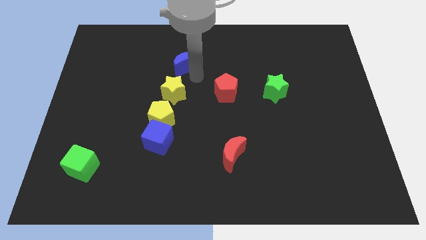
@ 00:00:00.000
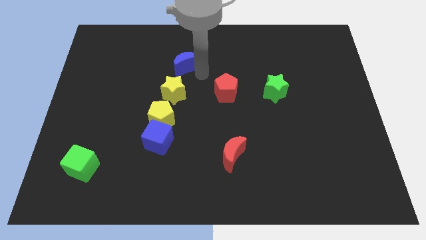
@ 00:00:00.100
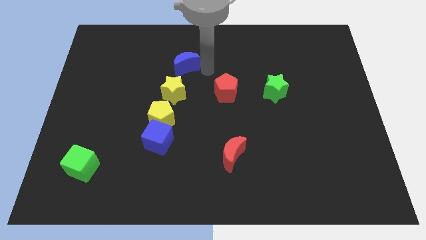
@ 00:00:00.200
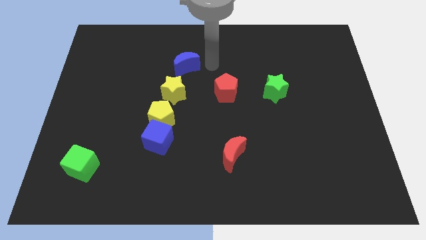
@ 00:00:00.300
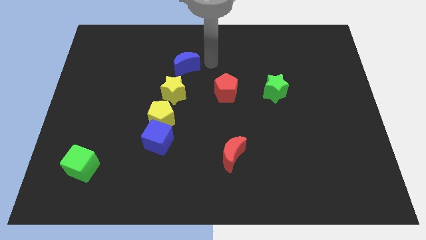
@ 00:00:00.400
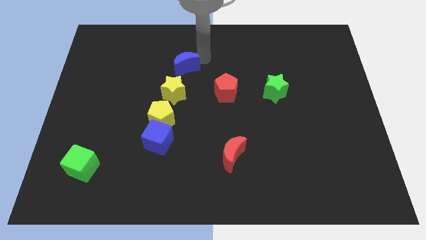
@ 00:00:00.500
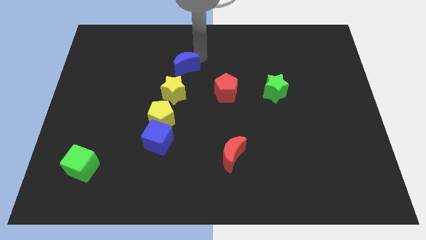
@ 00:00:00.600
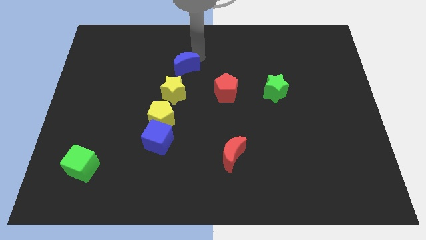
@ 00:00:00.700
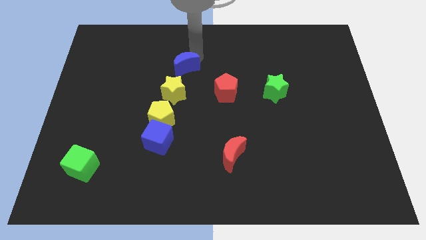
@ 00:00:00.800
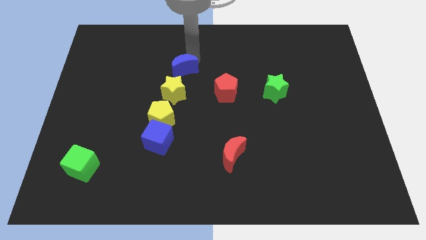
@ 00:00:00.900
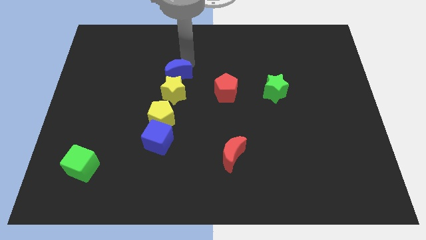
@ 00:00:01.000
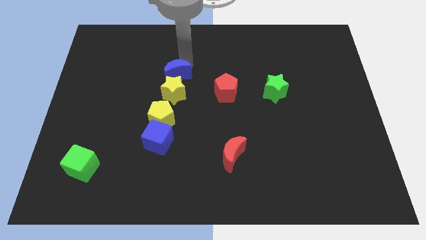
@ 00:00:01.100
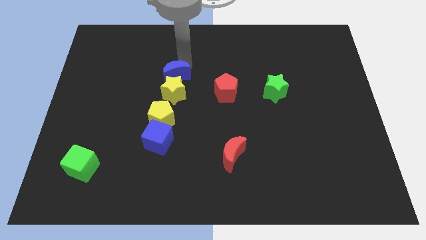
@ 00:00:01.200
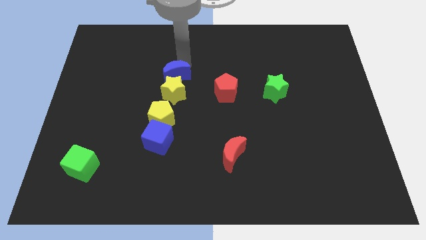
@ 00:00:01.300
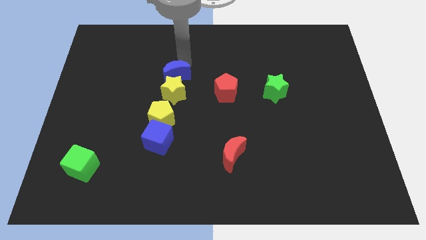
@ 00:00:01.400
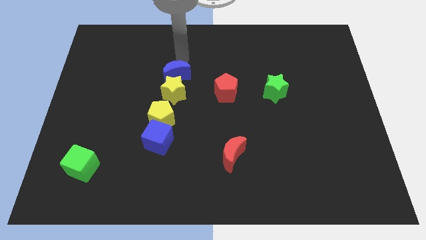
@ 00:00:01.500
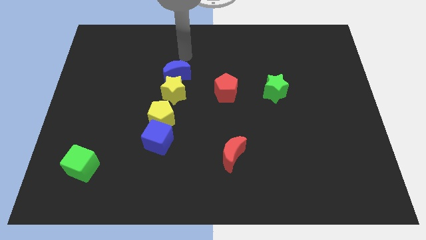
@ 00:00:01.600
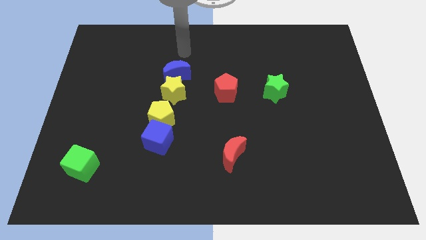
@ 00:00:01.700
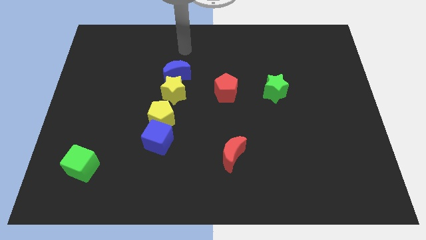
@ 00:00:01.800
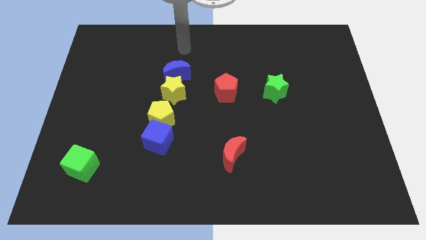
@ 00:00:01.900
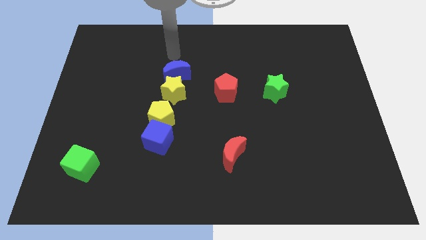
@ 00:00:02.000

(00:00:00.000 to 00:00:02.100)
slightly push the blue crescent to the top of the yellow star

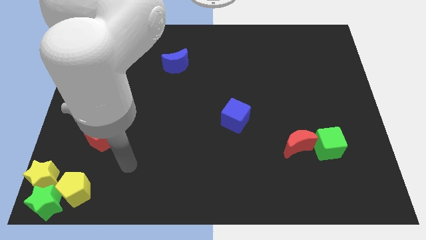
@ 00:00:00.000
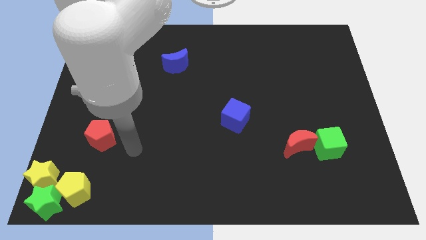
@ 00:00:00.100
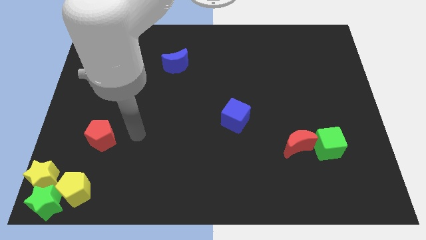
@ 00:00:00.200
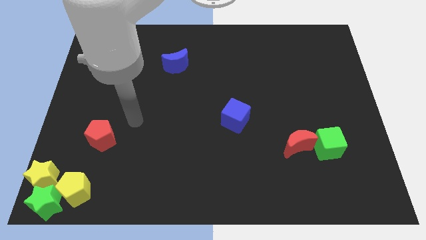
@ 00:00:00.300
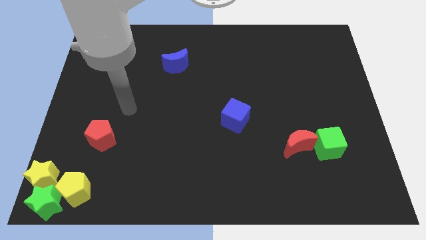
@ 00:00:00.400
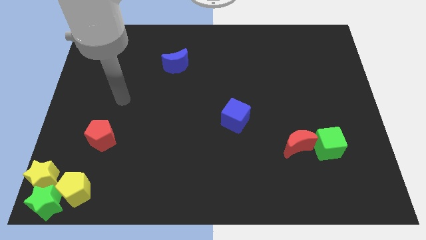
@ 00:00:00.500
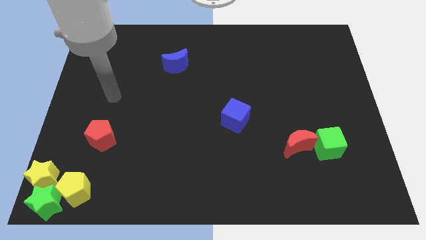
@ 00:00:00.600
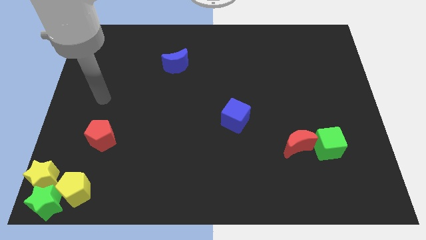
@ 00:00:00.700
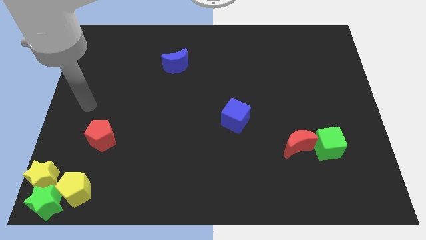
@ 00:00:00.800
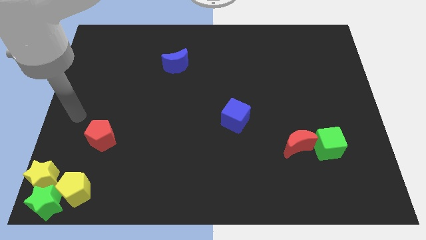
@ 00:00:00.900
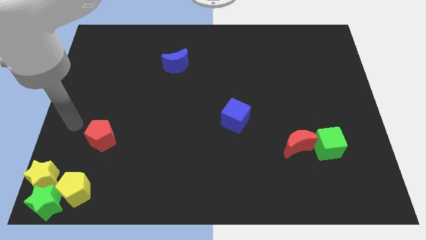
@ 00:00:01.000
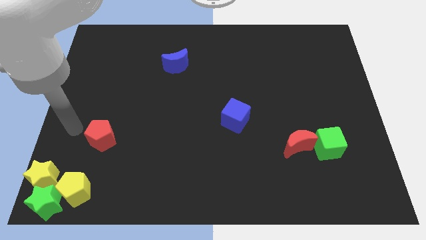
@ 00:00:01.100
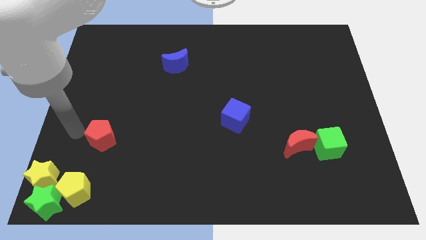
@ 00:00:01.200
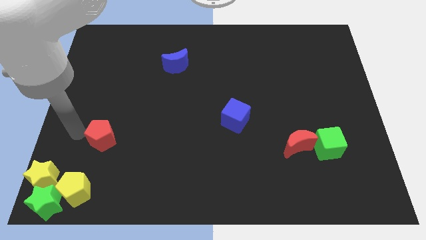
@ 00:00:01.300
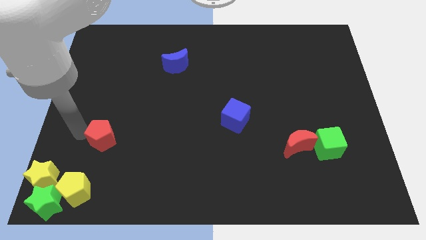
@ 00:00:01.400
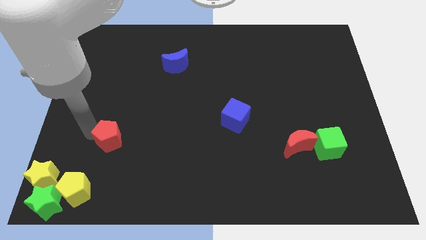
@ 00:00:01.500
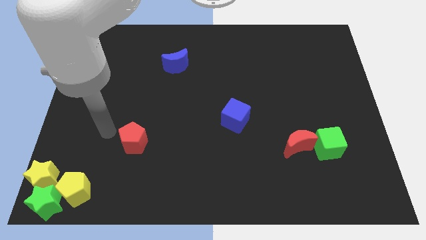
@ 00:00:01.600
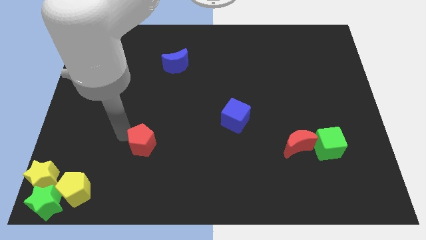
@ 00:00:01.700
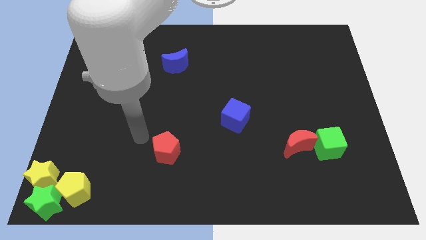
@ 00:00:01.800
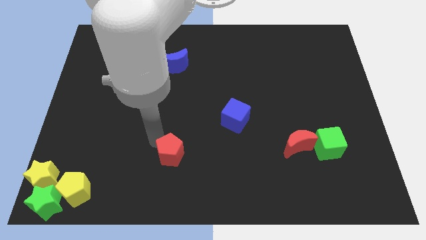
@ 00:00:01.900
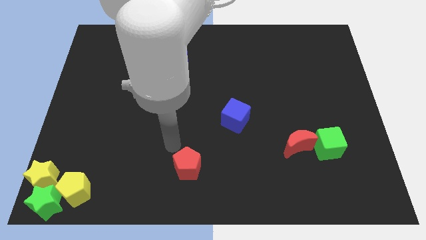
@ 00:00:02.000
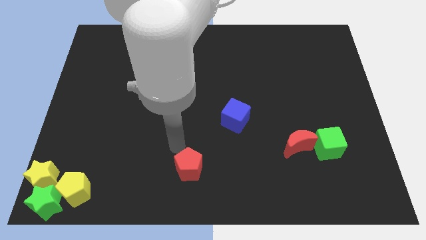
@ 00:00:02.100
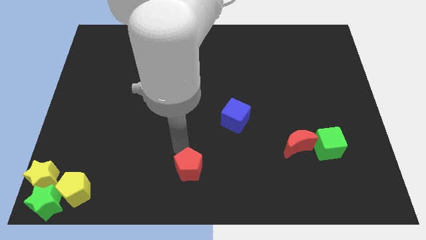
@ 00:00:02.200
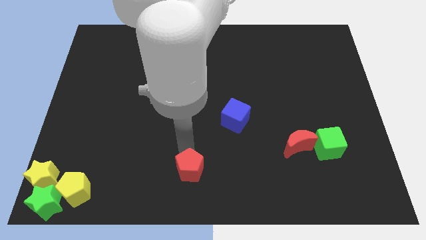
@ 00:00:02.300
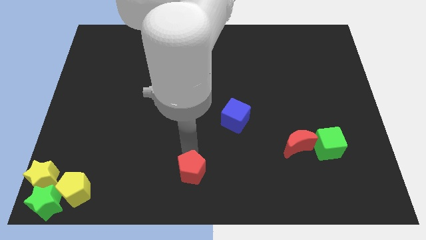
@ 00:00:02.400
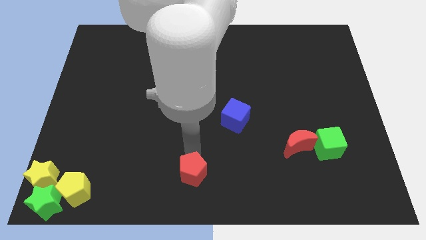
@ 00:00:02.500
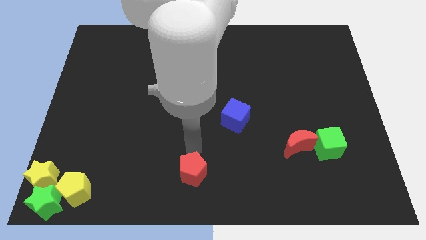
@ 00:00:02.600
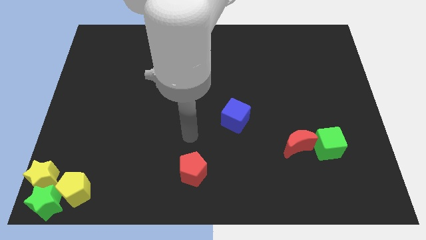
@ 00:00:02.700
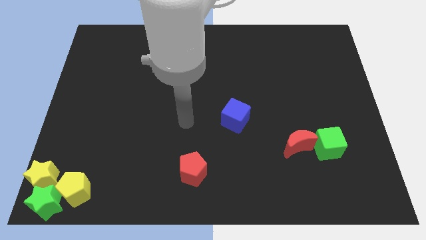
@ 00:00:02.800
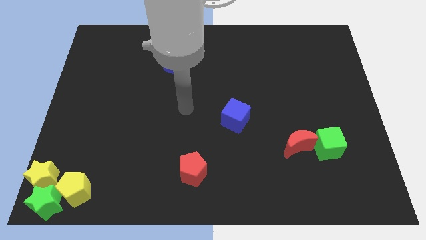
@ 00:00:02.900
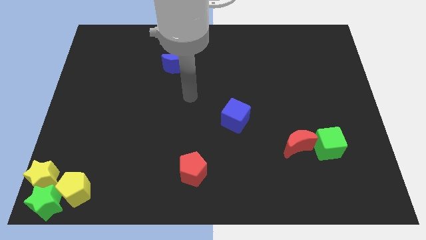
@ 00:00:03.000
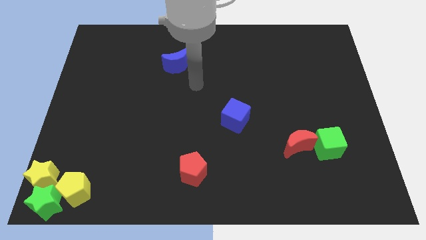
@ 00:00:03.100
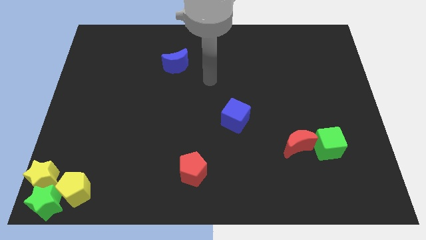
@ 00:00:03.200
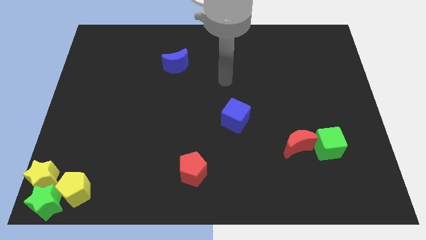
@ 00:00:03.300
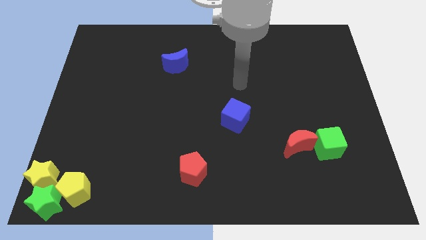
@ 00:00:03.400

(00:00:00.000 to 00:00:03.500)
place red pentagon to the bottom left of blue cube

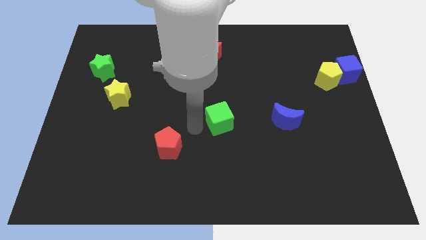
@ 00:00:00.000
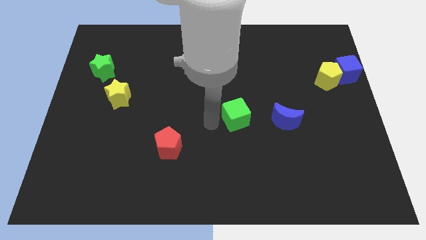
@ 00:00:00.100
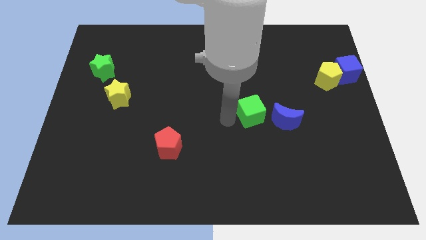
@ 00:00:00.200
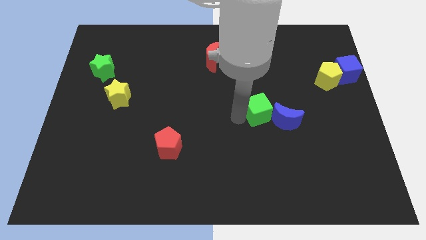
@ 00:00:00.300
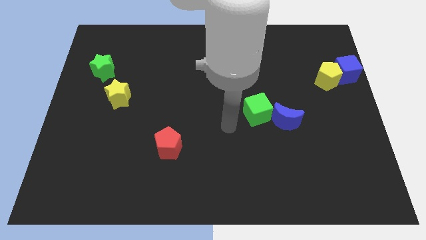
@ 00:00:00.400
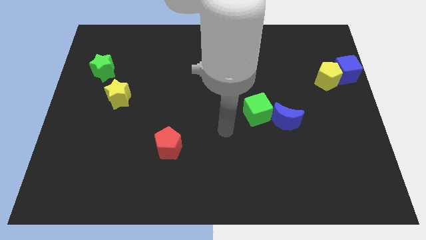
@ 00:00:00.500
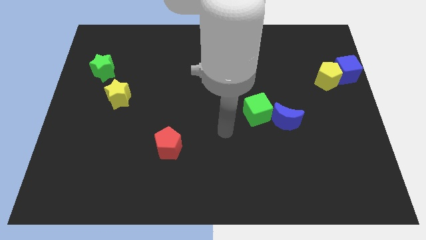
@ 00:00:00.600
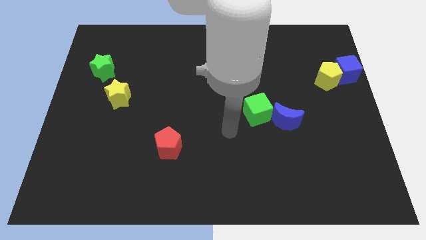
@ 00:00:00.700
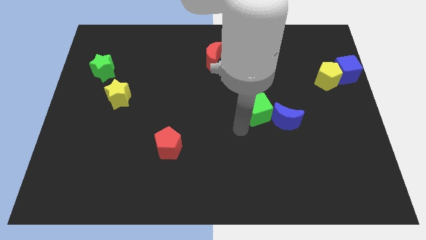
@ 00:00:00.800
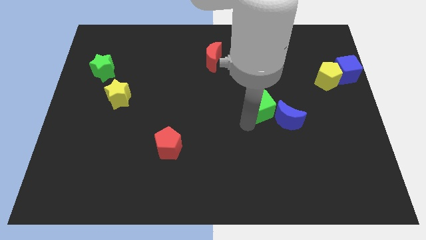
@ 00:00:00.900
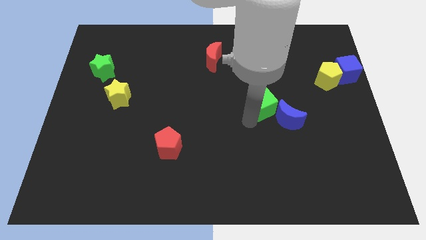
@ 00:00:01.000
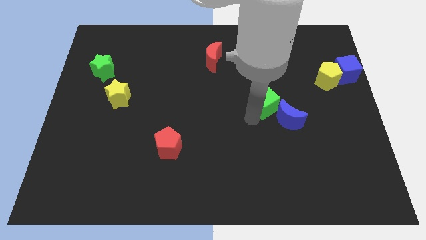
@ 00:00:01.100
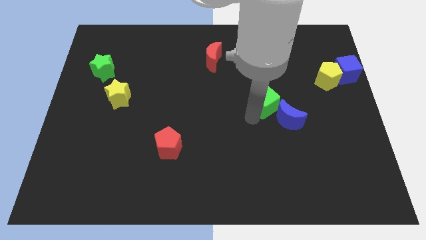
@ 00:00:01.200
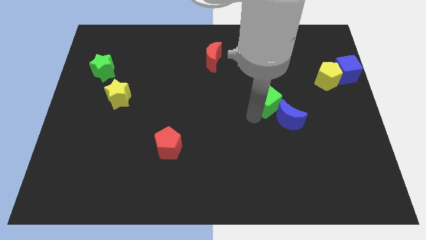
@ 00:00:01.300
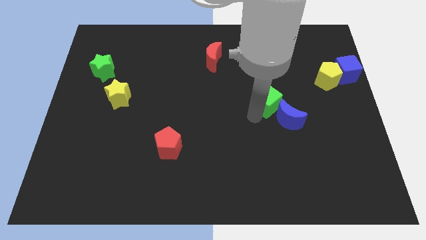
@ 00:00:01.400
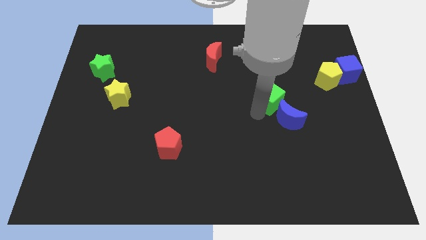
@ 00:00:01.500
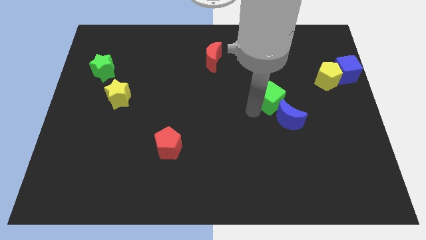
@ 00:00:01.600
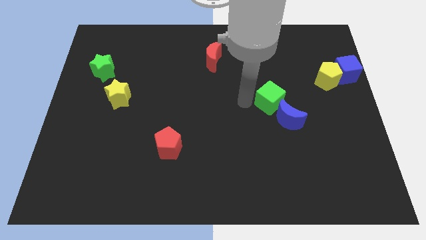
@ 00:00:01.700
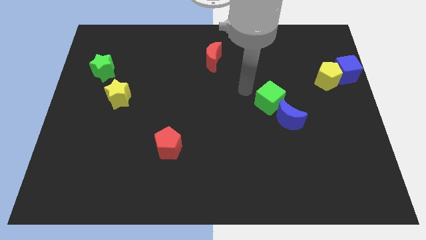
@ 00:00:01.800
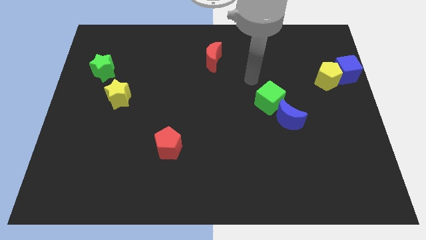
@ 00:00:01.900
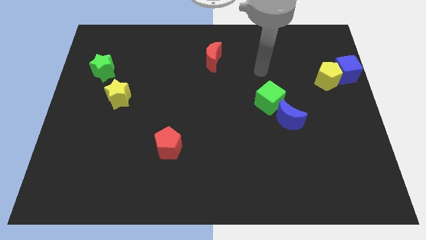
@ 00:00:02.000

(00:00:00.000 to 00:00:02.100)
place the green cube above the blue crescent

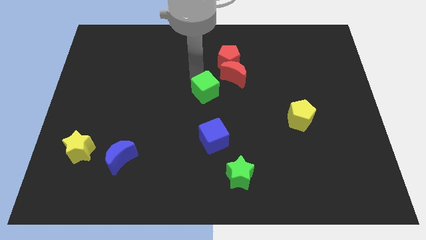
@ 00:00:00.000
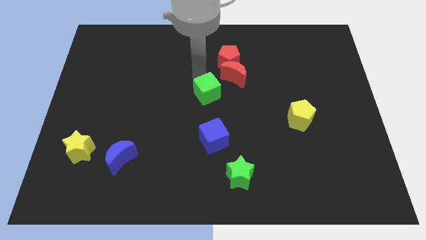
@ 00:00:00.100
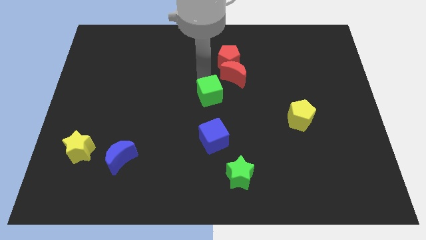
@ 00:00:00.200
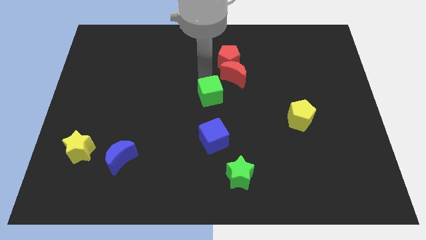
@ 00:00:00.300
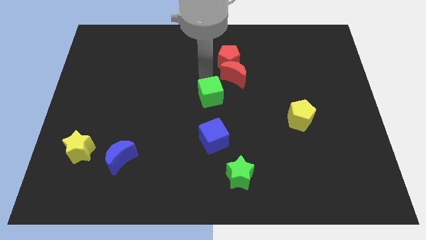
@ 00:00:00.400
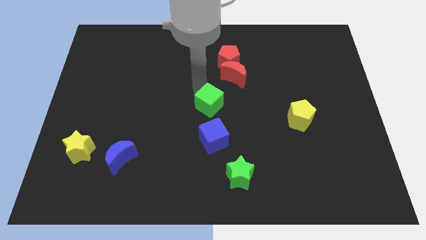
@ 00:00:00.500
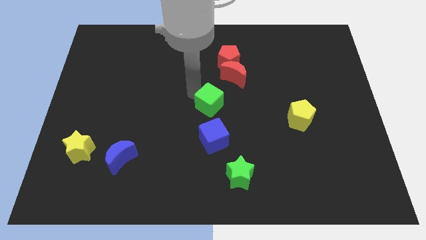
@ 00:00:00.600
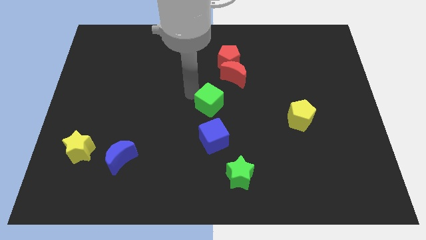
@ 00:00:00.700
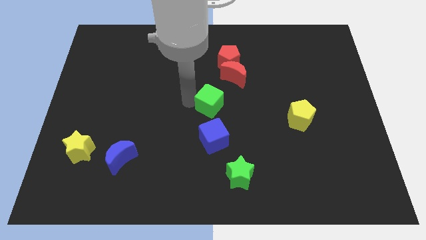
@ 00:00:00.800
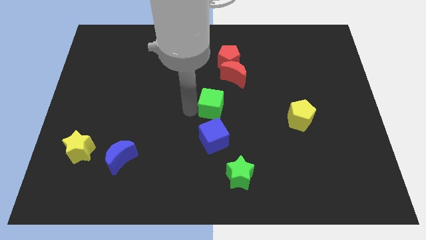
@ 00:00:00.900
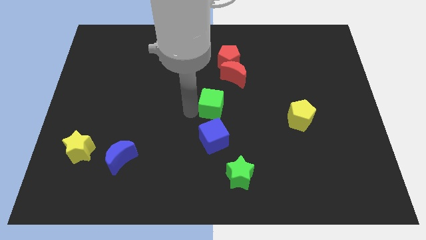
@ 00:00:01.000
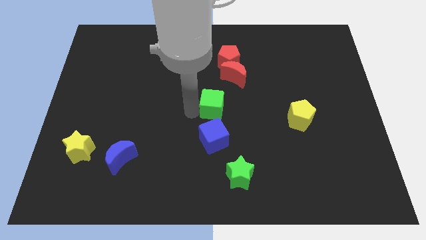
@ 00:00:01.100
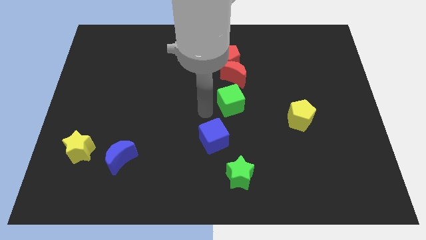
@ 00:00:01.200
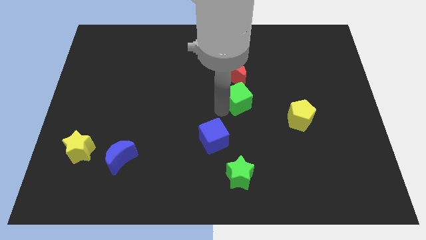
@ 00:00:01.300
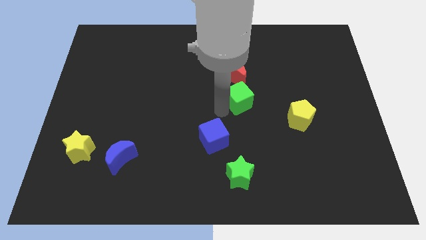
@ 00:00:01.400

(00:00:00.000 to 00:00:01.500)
place the green cube below the red crescent
